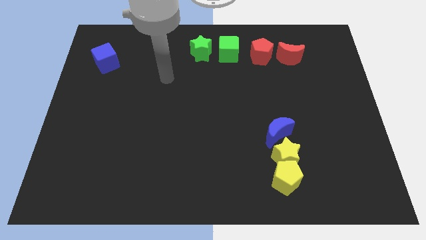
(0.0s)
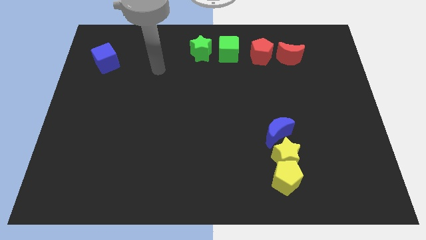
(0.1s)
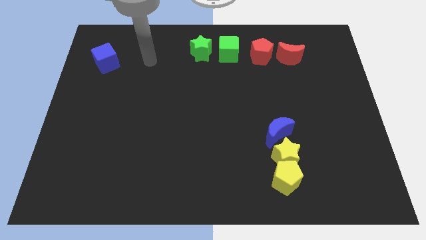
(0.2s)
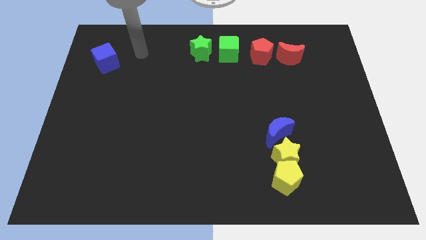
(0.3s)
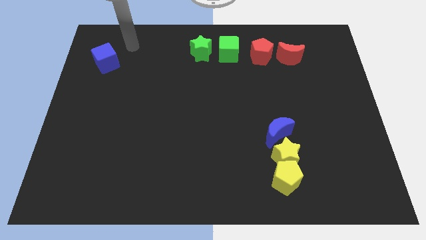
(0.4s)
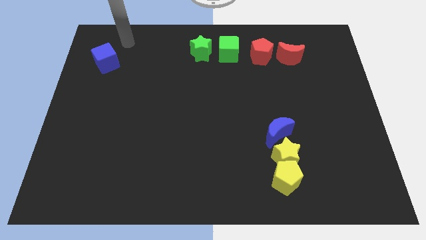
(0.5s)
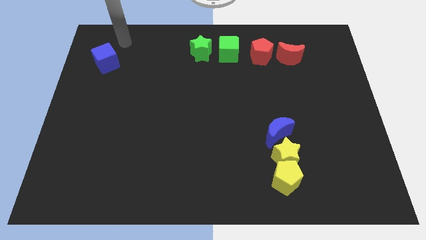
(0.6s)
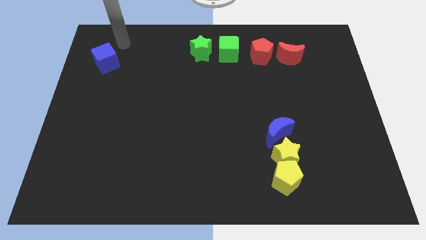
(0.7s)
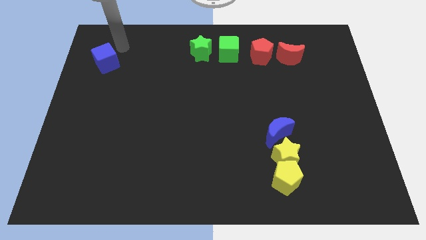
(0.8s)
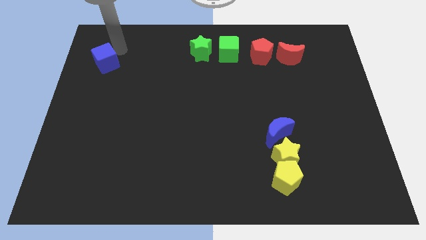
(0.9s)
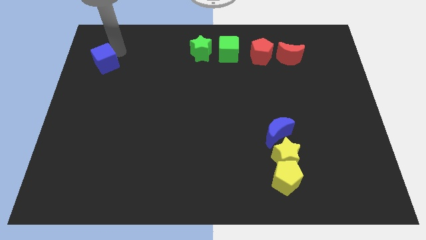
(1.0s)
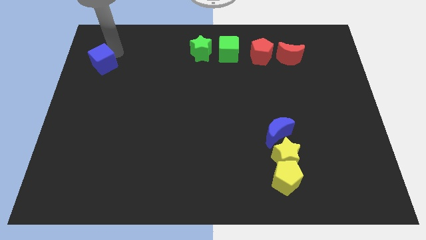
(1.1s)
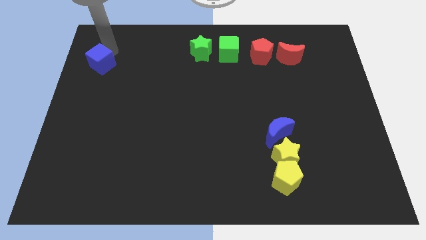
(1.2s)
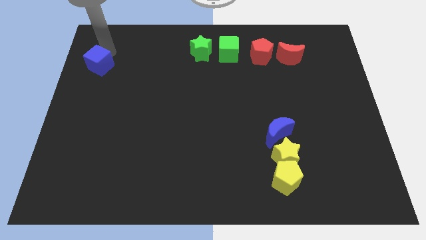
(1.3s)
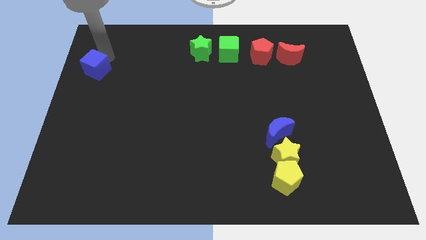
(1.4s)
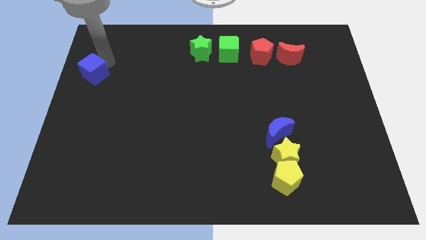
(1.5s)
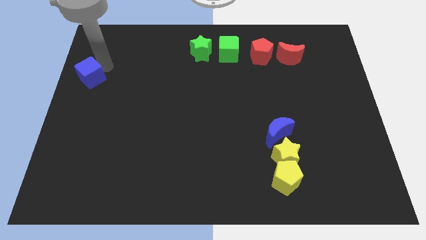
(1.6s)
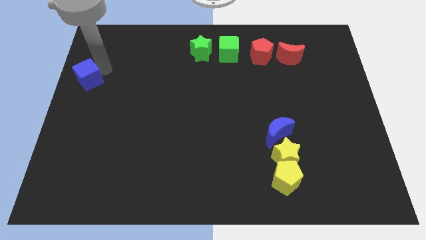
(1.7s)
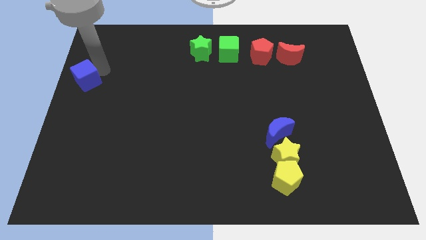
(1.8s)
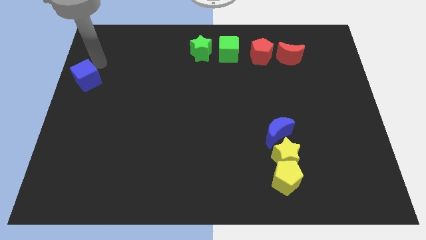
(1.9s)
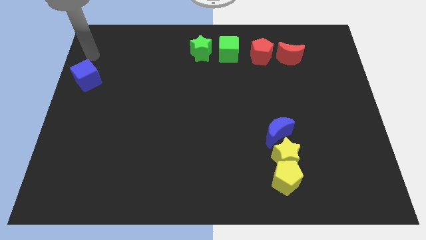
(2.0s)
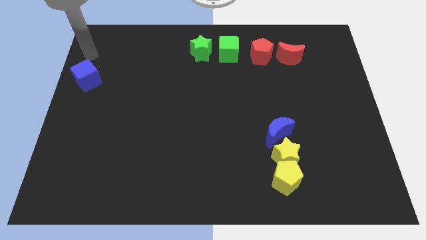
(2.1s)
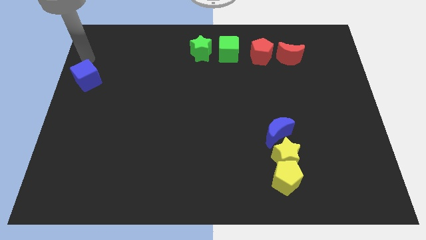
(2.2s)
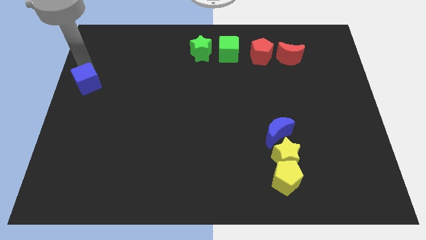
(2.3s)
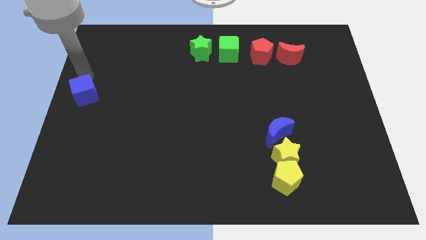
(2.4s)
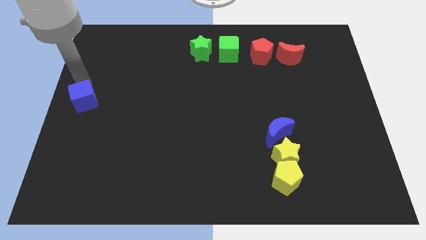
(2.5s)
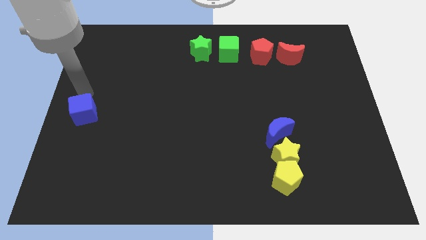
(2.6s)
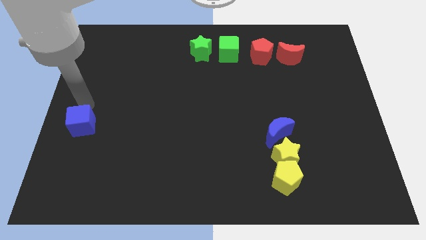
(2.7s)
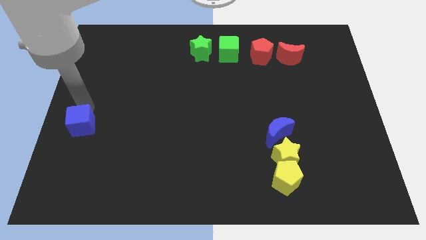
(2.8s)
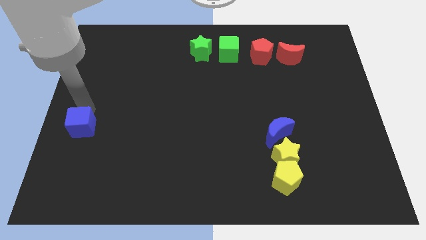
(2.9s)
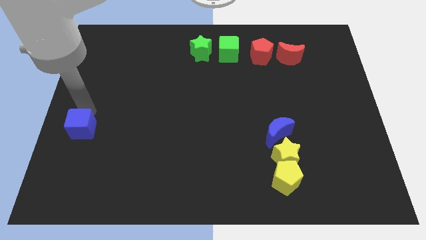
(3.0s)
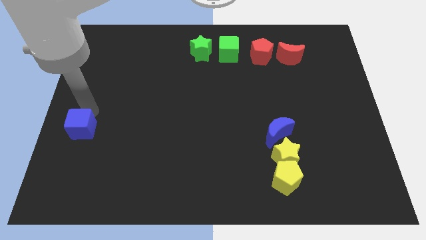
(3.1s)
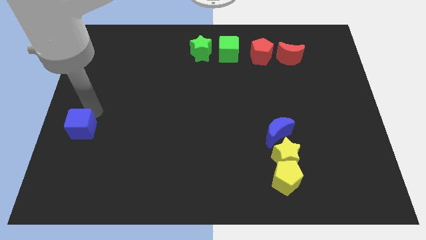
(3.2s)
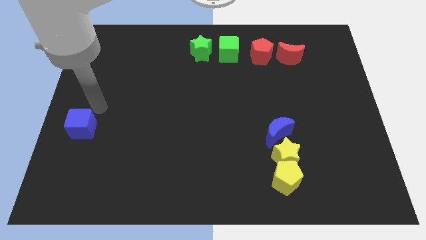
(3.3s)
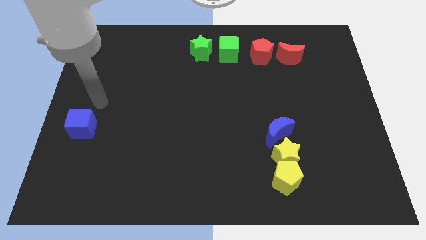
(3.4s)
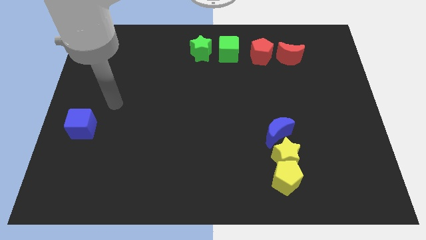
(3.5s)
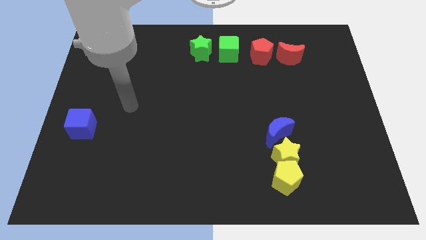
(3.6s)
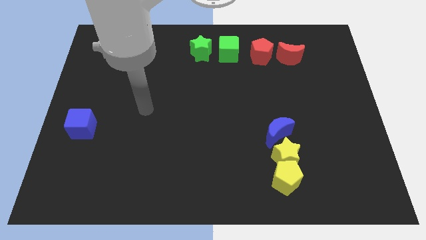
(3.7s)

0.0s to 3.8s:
push the blue cube to the center left

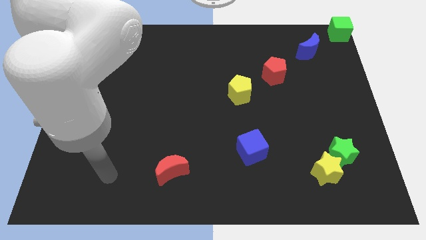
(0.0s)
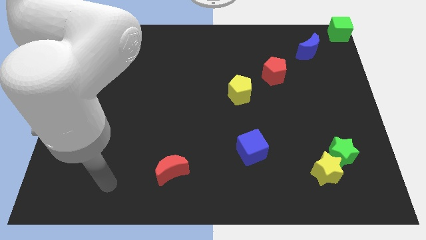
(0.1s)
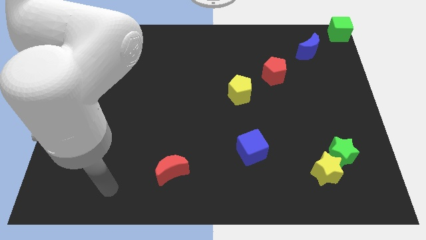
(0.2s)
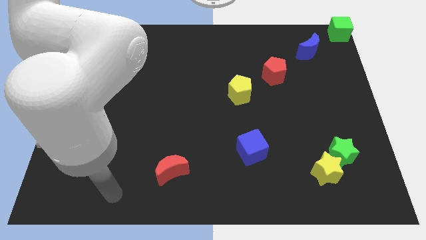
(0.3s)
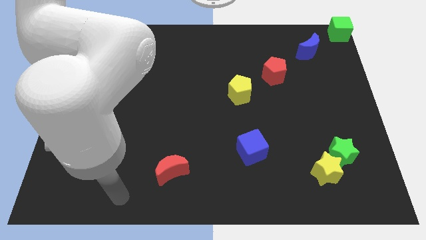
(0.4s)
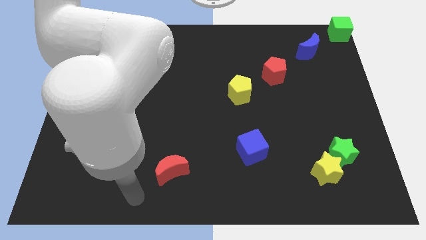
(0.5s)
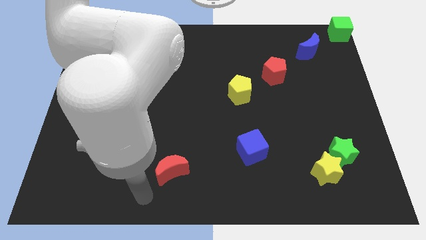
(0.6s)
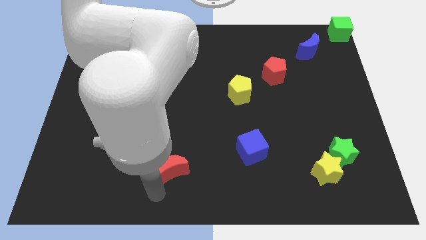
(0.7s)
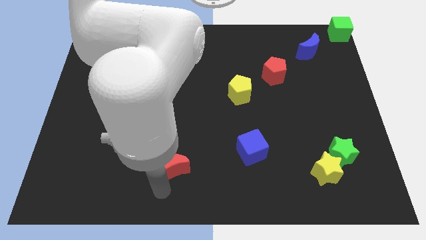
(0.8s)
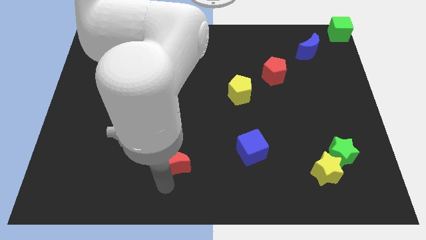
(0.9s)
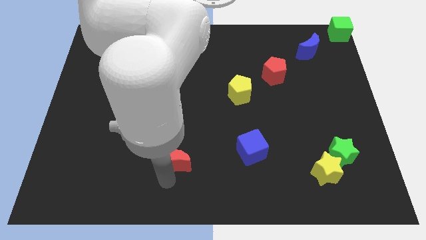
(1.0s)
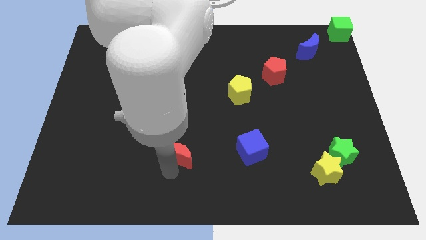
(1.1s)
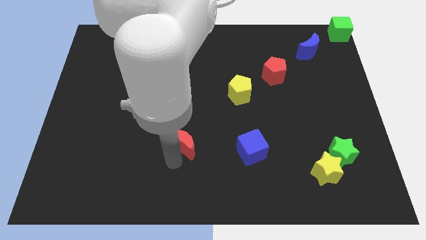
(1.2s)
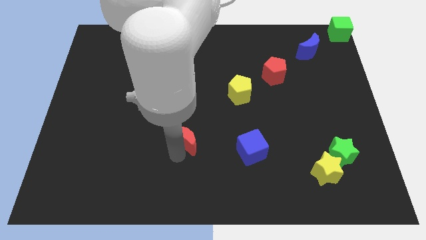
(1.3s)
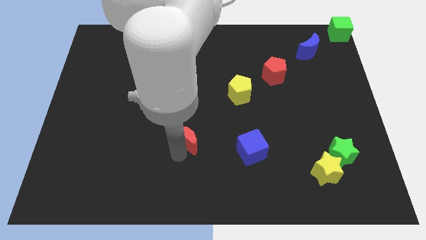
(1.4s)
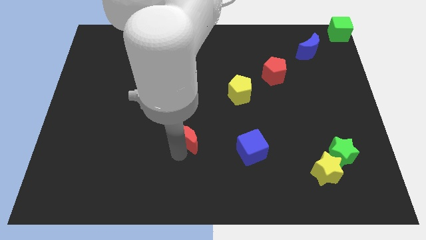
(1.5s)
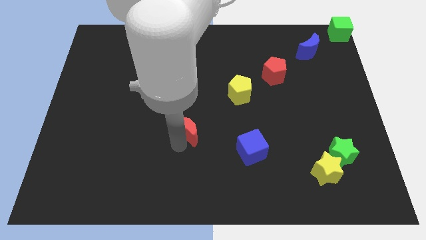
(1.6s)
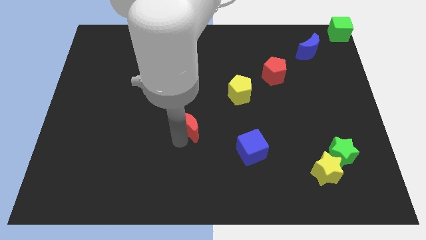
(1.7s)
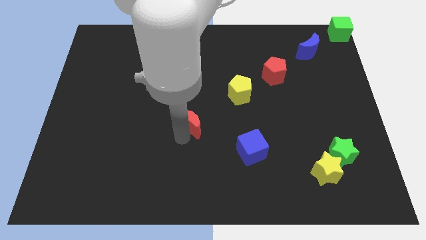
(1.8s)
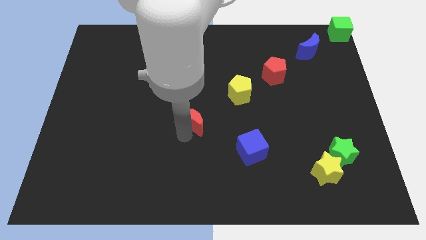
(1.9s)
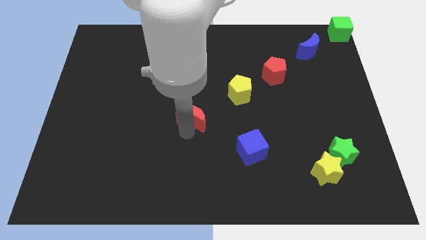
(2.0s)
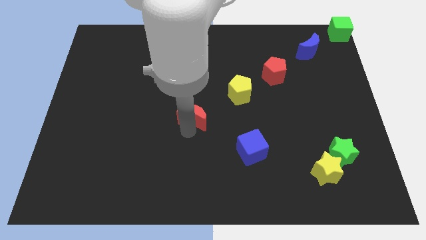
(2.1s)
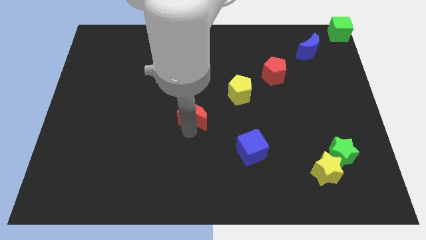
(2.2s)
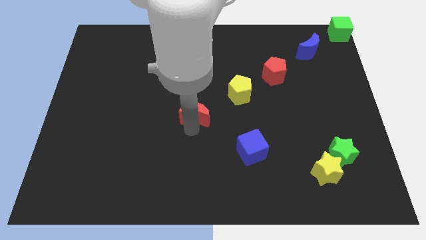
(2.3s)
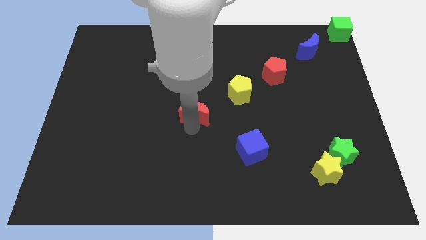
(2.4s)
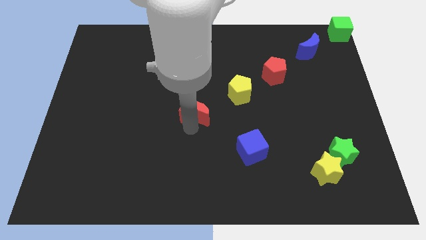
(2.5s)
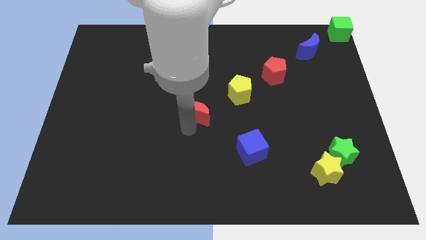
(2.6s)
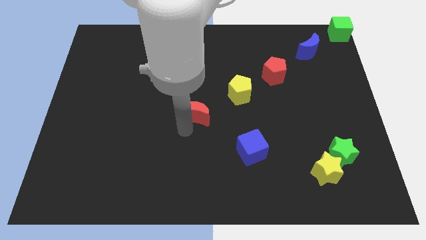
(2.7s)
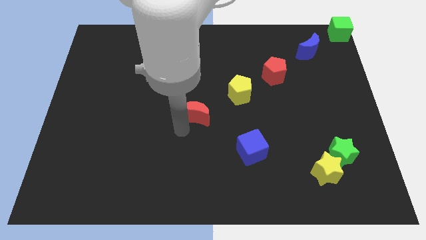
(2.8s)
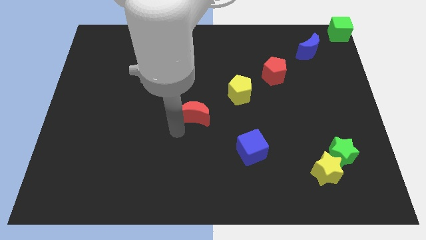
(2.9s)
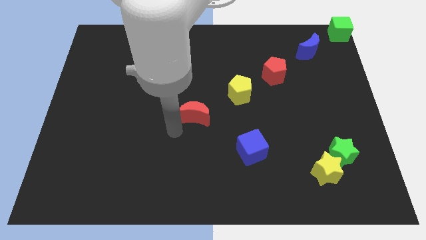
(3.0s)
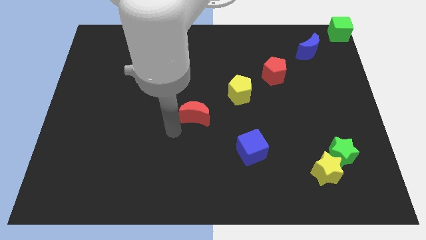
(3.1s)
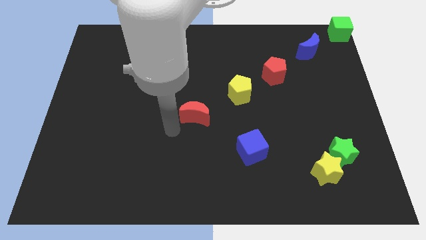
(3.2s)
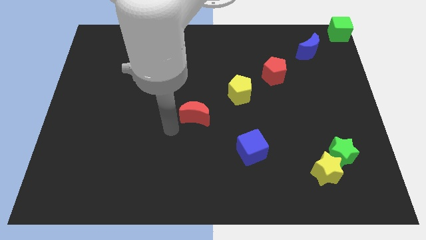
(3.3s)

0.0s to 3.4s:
push the red moon diagonal to the yellow pentagon

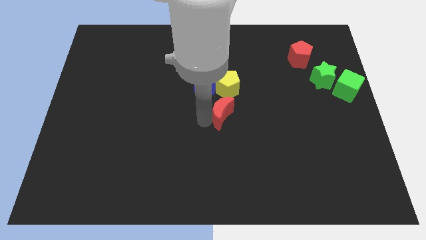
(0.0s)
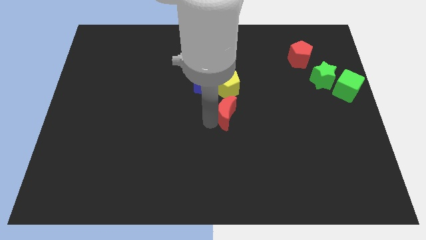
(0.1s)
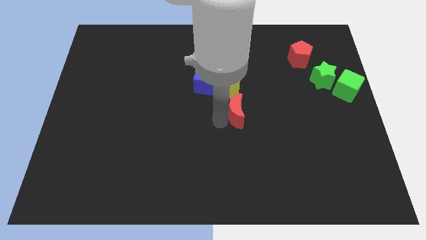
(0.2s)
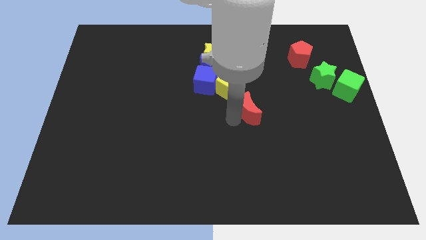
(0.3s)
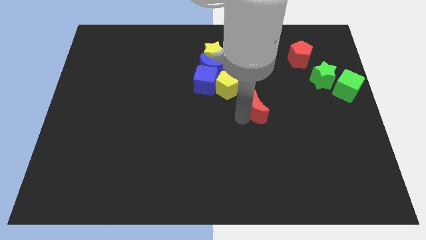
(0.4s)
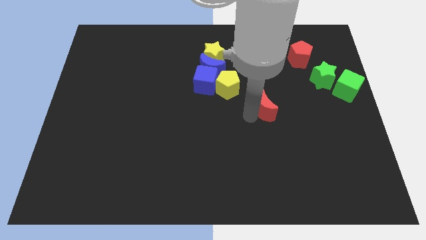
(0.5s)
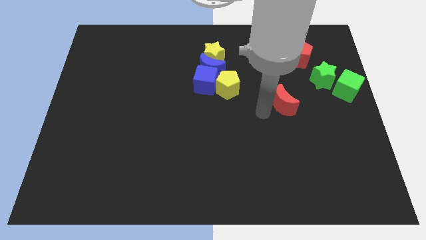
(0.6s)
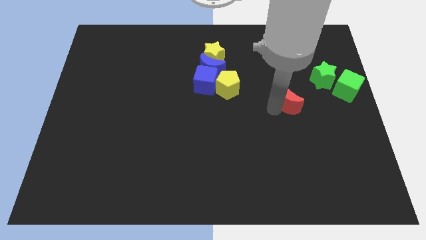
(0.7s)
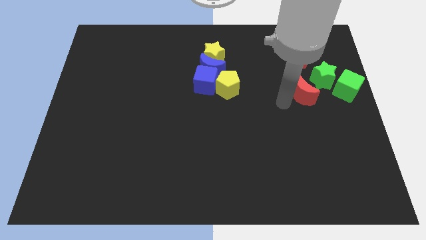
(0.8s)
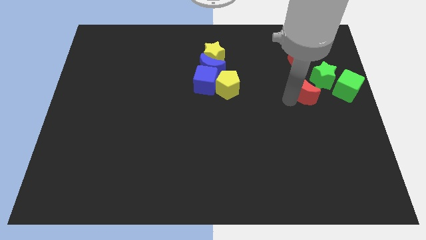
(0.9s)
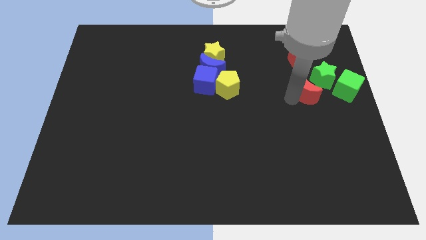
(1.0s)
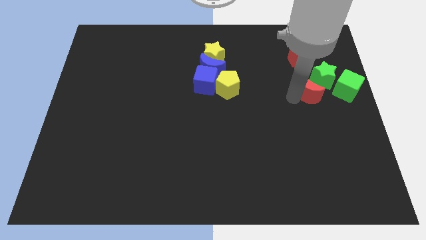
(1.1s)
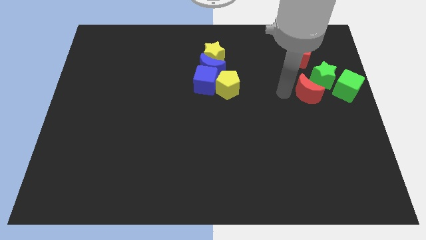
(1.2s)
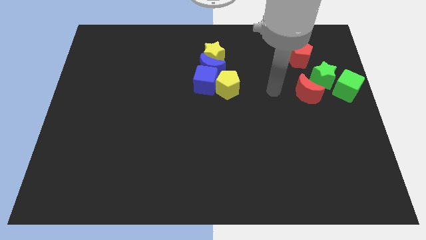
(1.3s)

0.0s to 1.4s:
move the red moon diagonally bottom left to green star

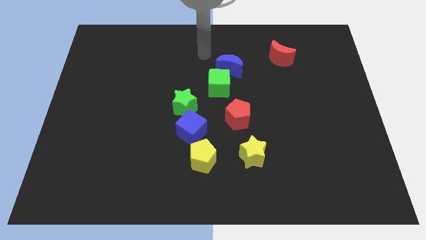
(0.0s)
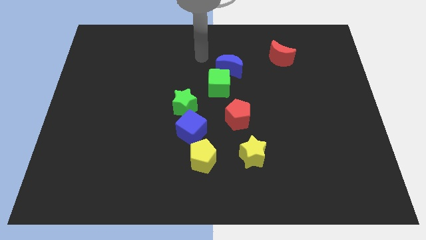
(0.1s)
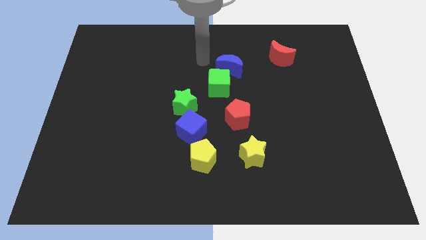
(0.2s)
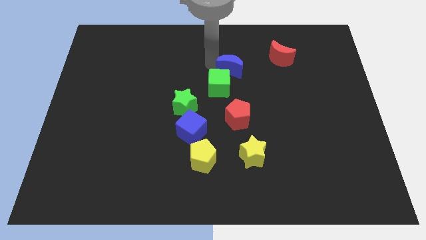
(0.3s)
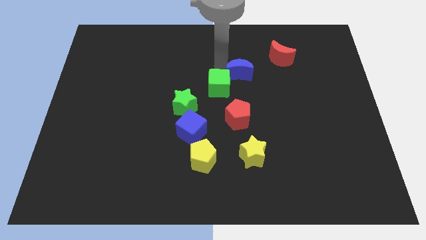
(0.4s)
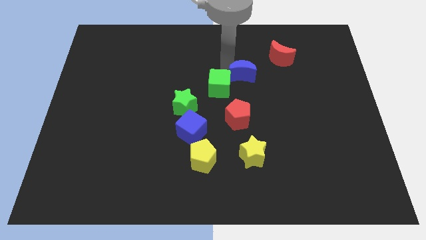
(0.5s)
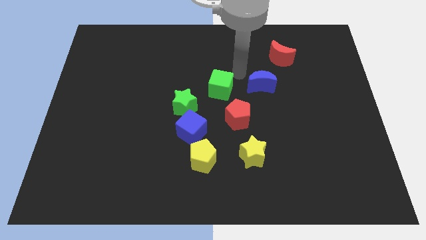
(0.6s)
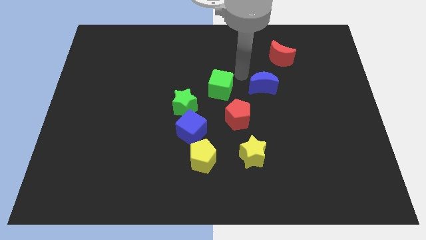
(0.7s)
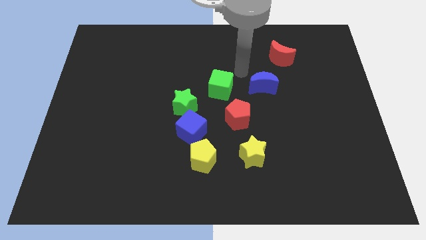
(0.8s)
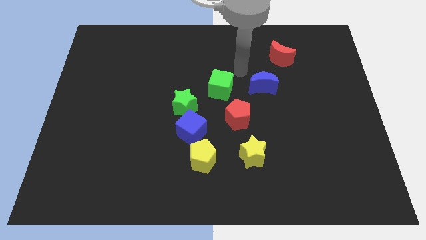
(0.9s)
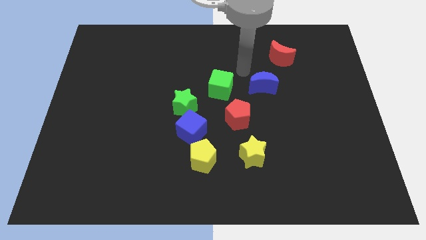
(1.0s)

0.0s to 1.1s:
place the blue crescent right to the green cube
